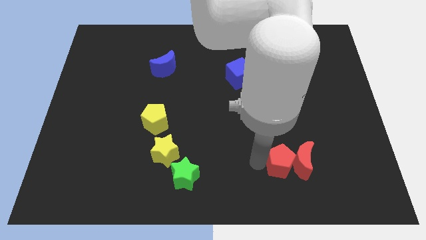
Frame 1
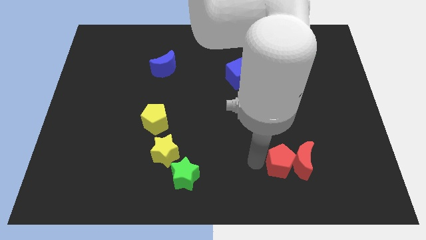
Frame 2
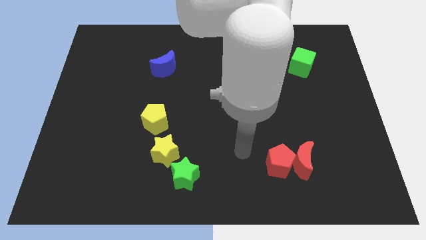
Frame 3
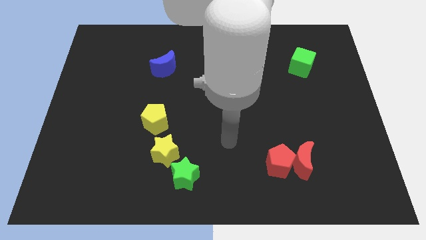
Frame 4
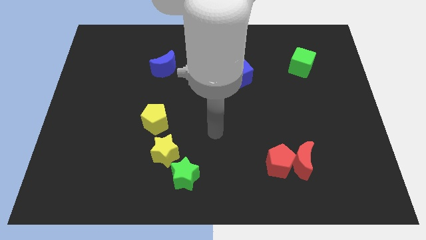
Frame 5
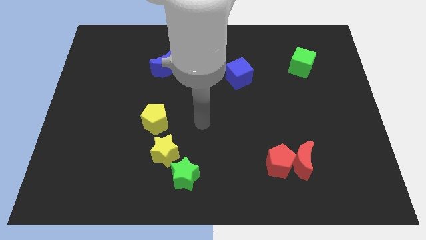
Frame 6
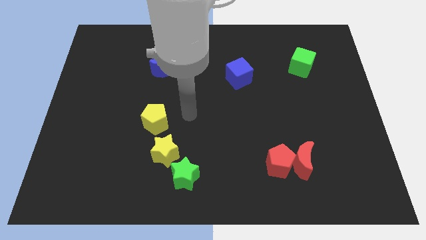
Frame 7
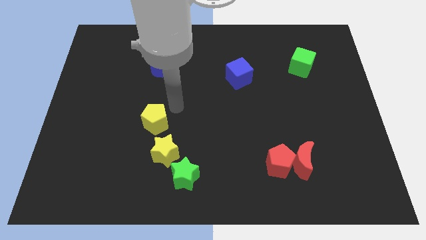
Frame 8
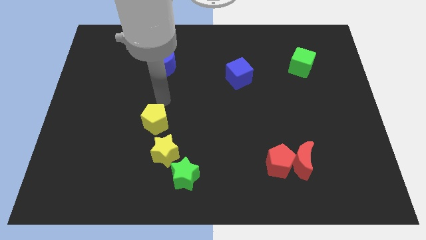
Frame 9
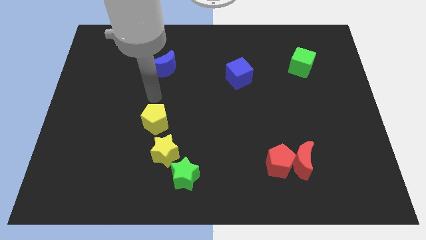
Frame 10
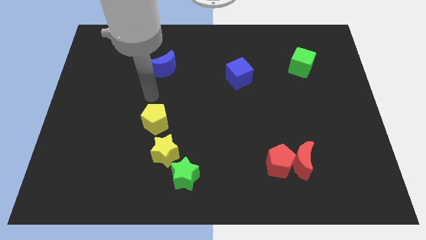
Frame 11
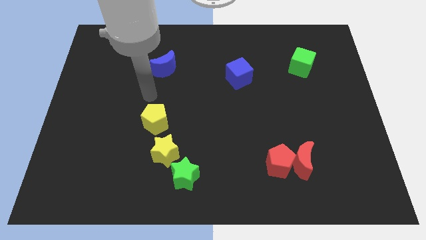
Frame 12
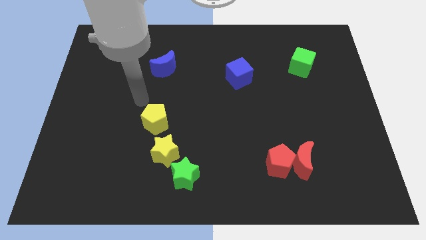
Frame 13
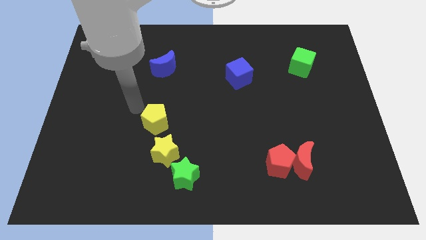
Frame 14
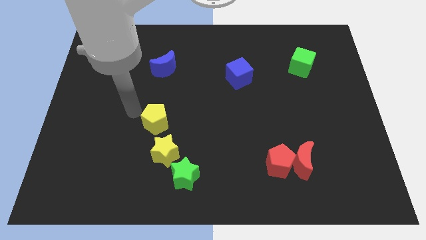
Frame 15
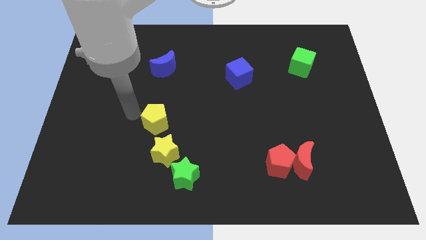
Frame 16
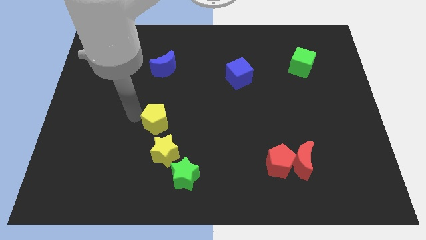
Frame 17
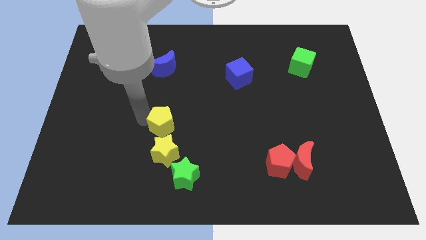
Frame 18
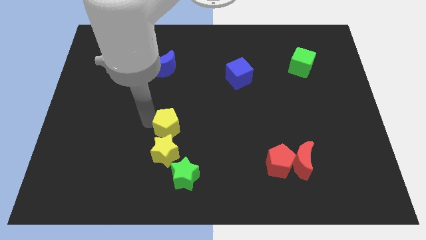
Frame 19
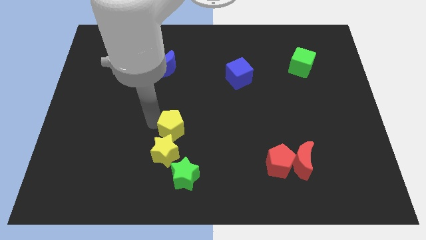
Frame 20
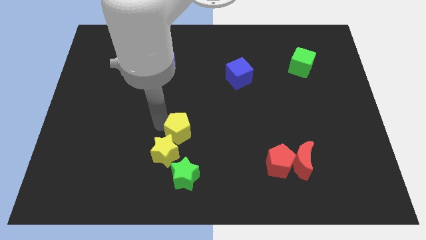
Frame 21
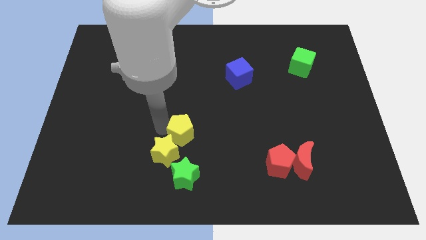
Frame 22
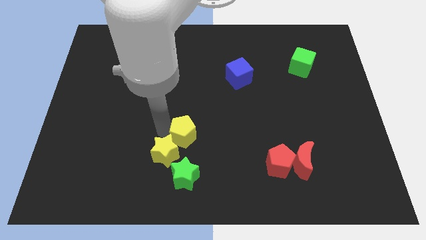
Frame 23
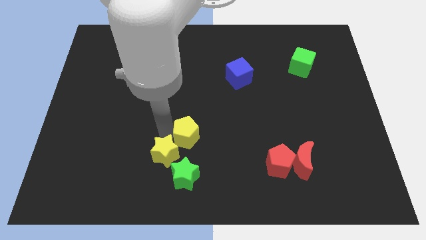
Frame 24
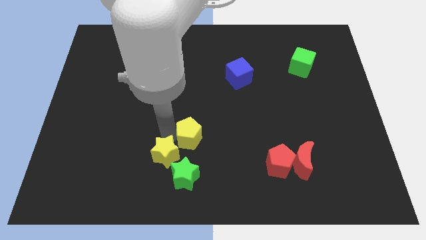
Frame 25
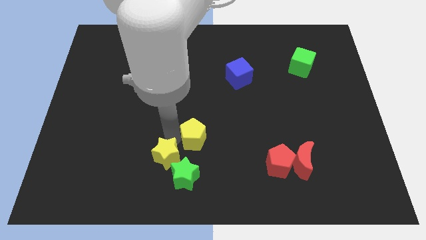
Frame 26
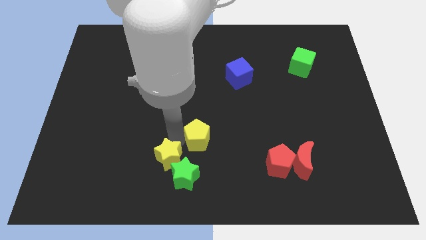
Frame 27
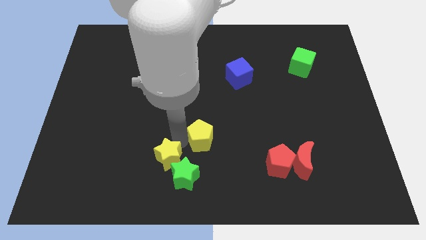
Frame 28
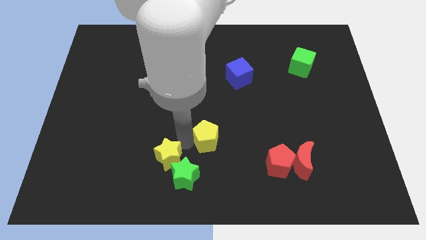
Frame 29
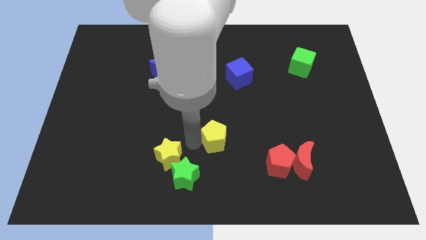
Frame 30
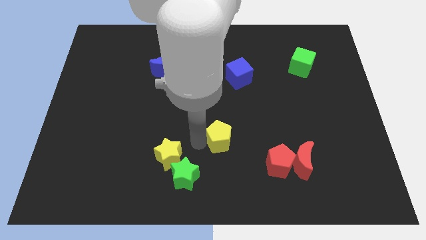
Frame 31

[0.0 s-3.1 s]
move the yellow pentagon towards the red crescent

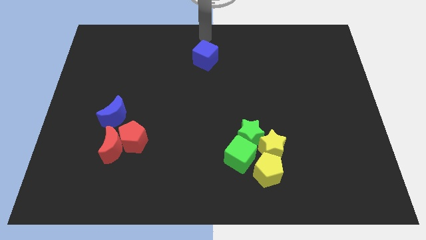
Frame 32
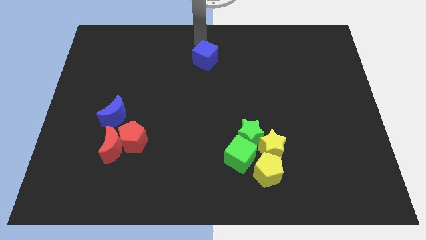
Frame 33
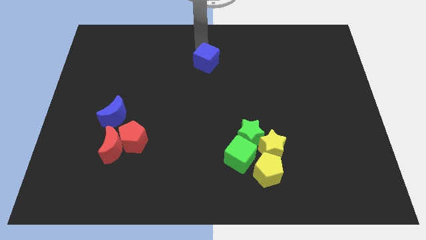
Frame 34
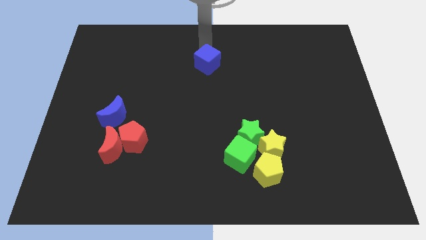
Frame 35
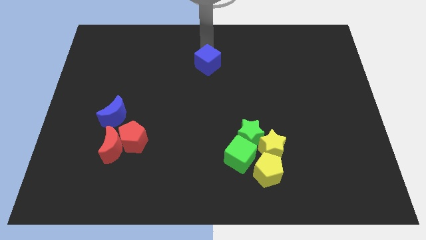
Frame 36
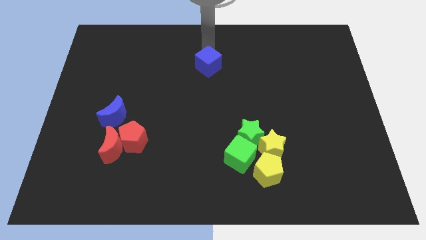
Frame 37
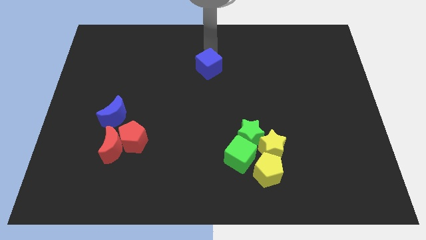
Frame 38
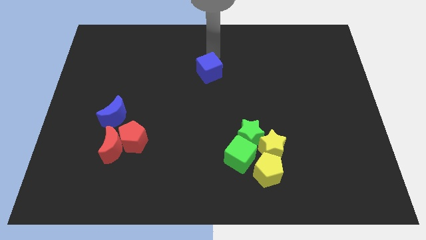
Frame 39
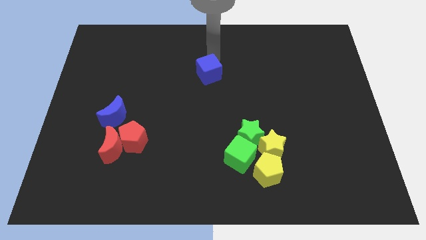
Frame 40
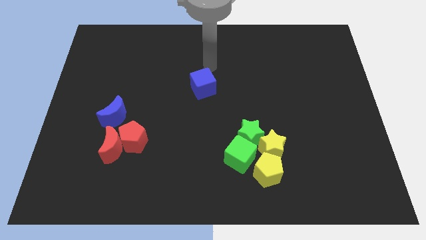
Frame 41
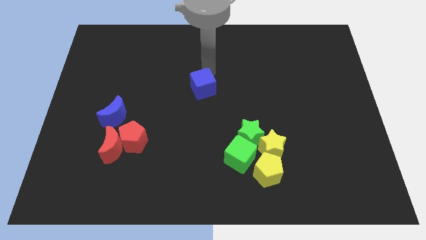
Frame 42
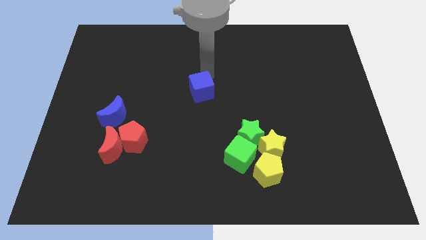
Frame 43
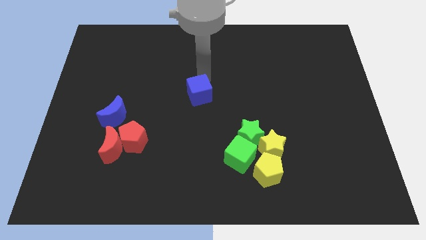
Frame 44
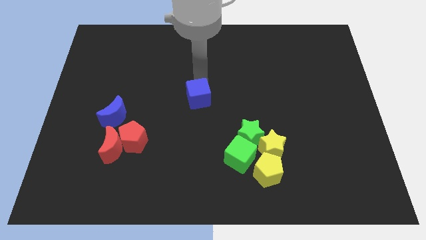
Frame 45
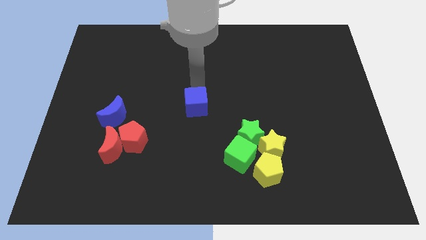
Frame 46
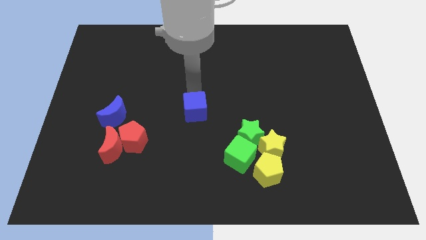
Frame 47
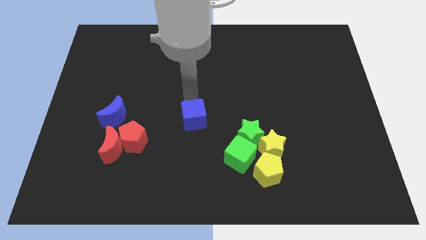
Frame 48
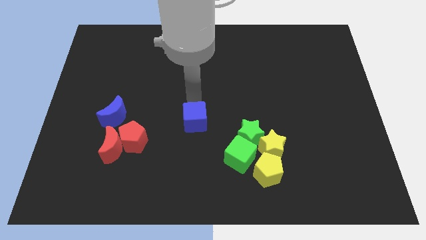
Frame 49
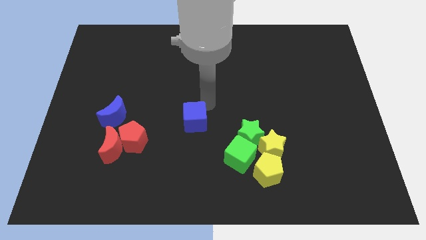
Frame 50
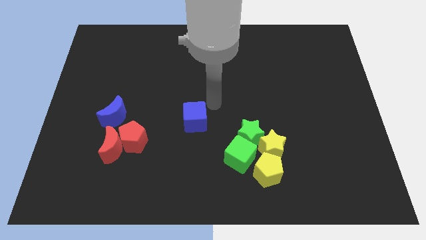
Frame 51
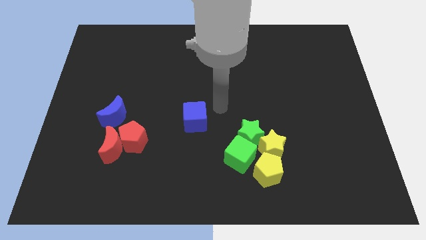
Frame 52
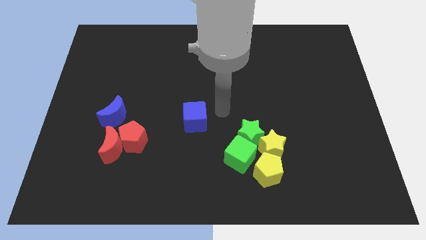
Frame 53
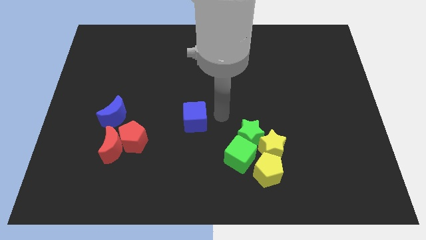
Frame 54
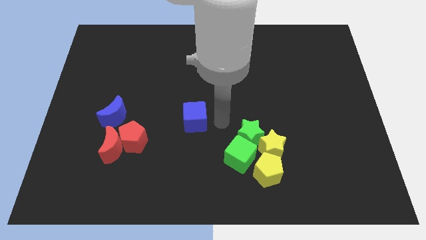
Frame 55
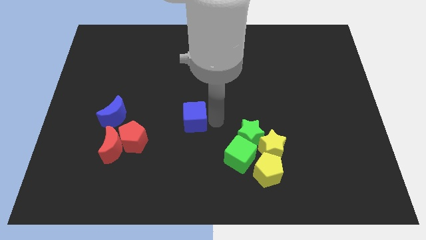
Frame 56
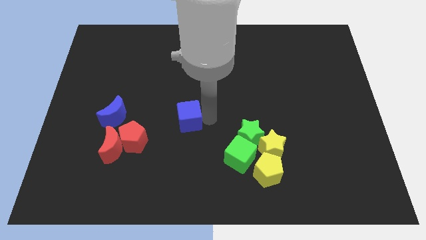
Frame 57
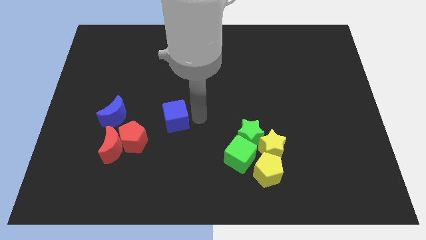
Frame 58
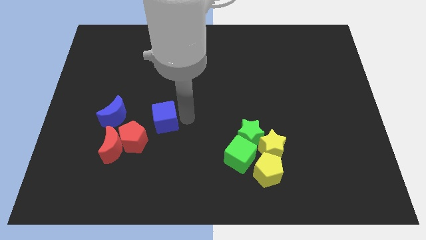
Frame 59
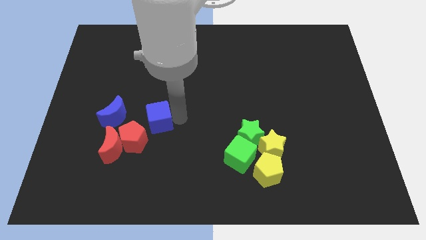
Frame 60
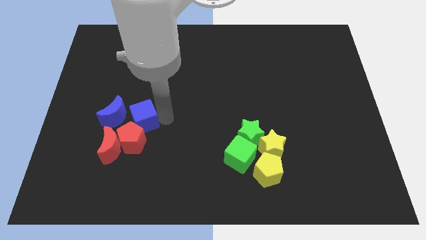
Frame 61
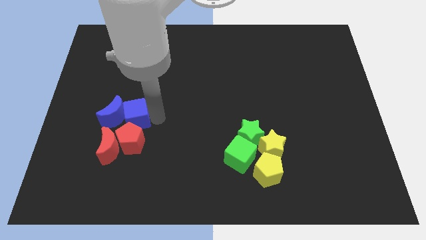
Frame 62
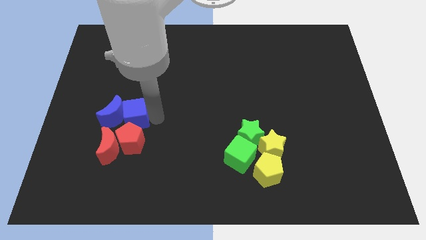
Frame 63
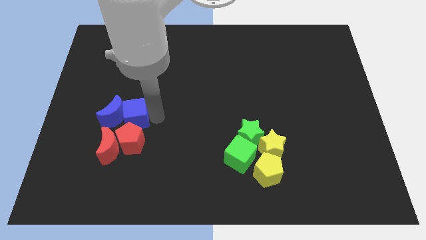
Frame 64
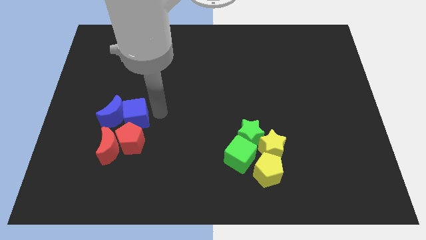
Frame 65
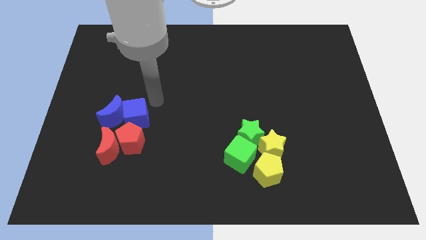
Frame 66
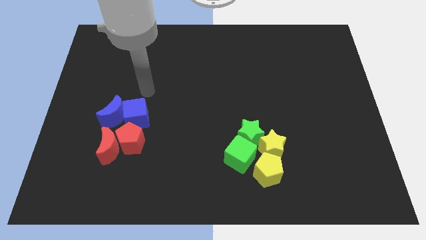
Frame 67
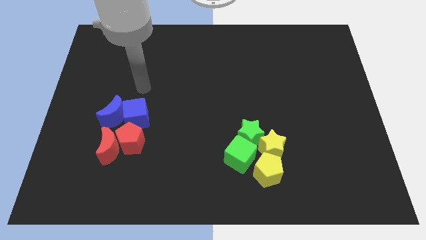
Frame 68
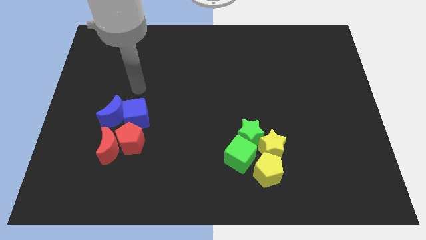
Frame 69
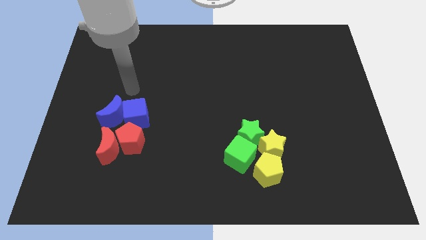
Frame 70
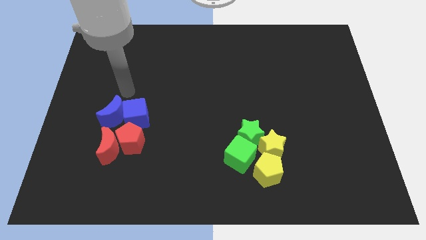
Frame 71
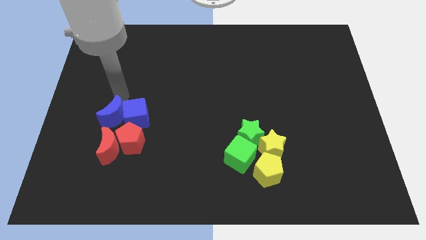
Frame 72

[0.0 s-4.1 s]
put the blue cube at the top of the red pentagon

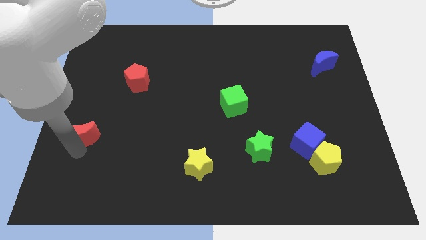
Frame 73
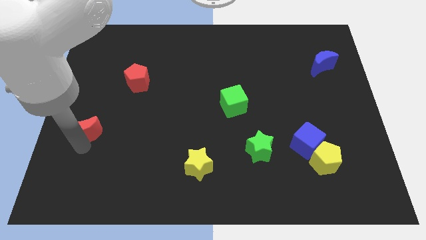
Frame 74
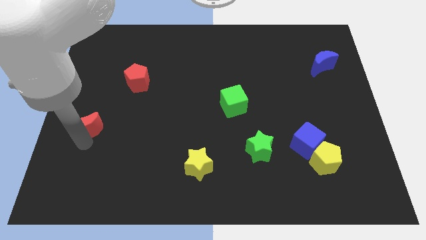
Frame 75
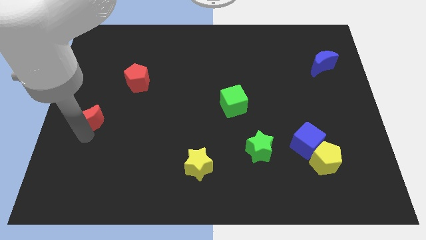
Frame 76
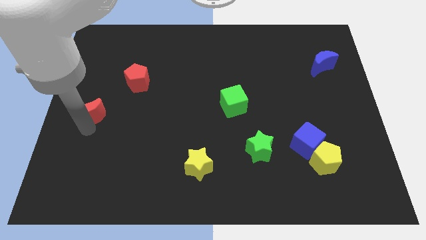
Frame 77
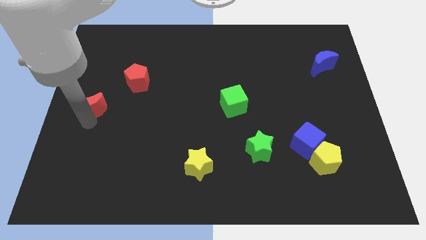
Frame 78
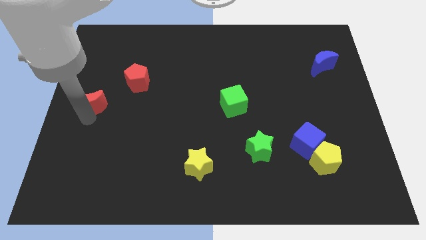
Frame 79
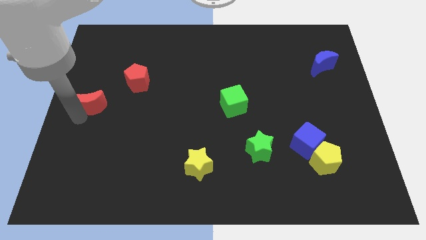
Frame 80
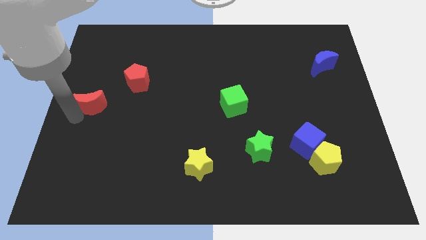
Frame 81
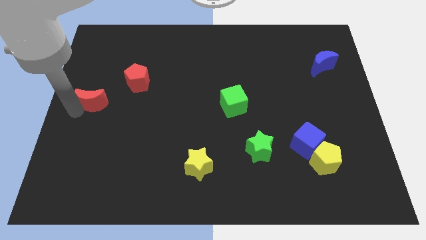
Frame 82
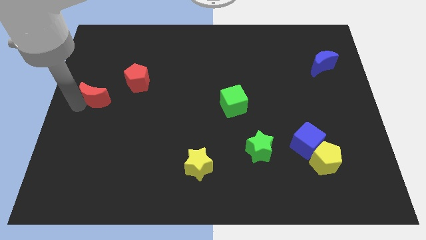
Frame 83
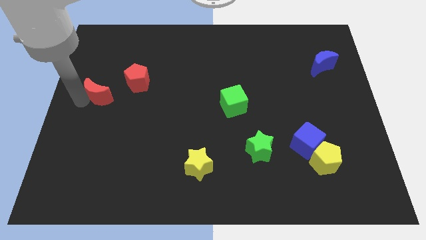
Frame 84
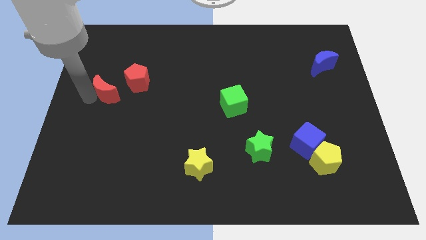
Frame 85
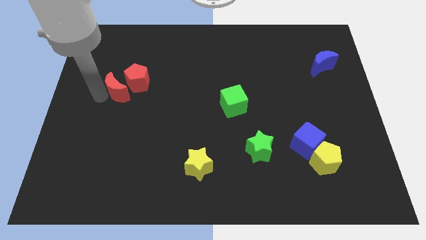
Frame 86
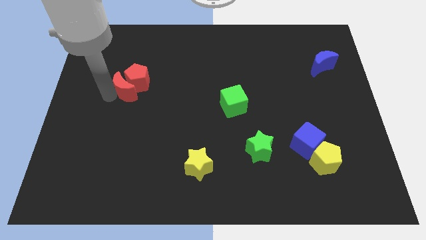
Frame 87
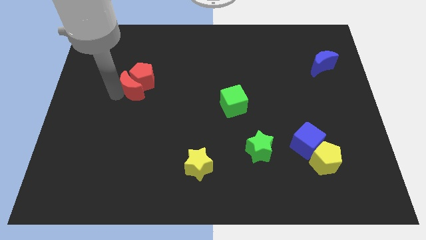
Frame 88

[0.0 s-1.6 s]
move the red crescent into the red pentagon

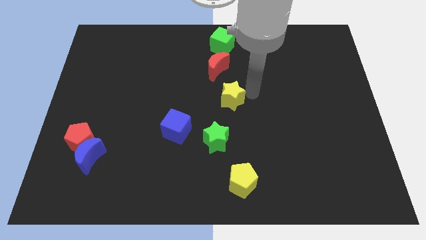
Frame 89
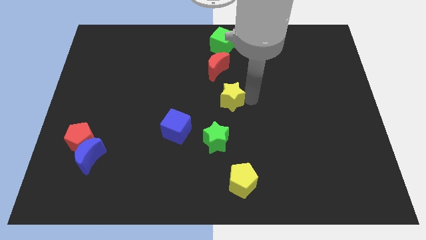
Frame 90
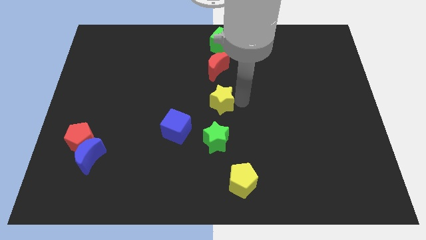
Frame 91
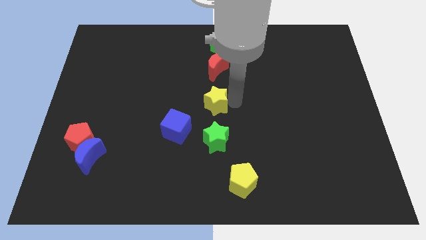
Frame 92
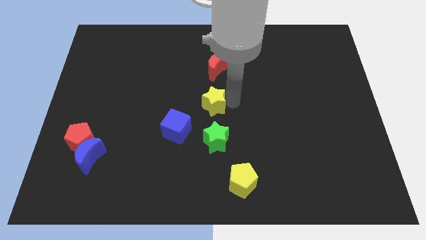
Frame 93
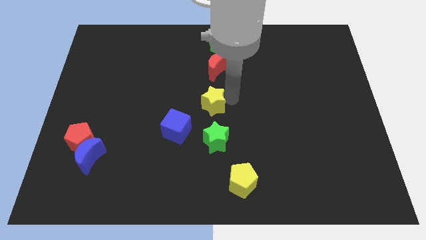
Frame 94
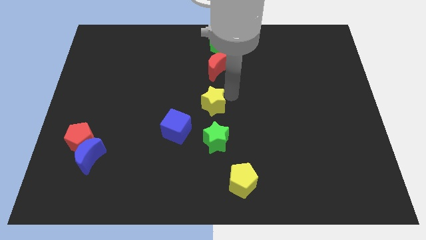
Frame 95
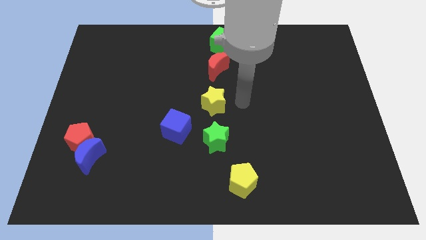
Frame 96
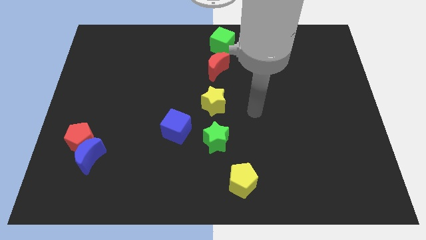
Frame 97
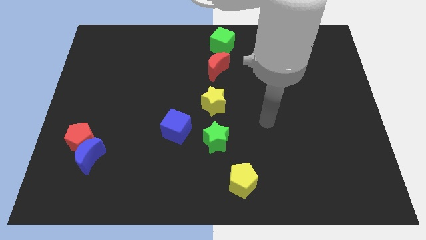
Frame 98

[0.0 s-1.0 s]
place the yellow star vertically below the red crescent
